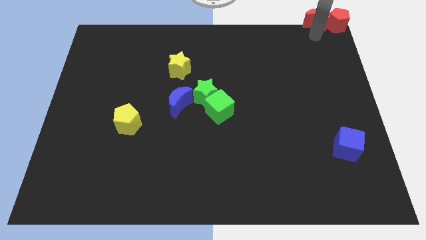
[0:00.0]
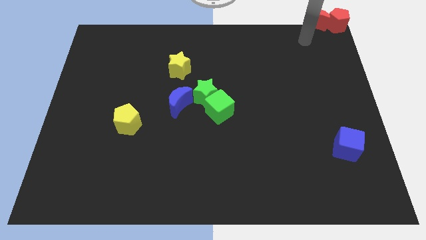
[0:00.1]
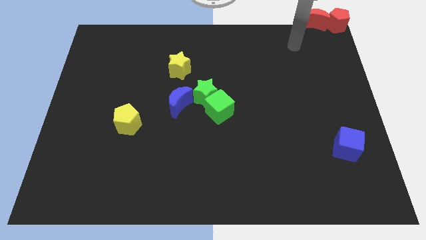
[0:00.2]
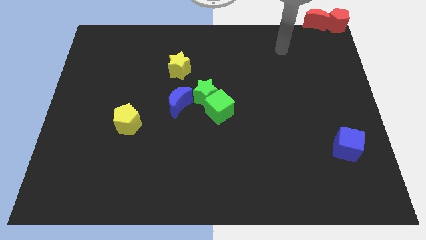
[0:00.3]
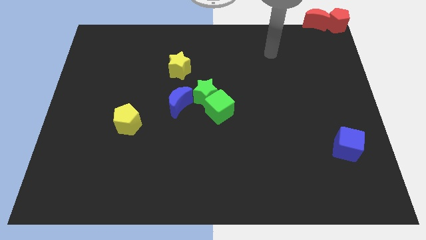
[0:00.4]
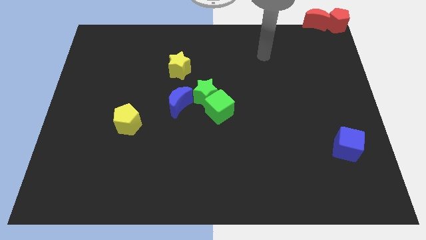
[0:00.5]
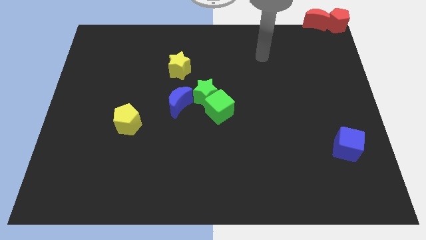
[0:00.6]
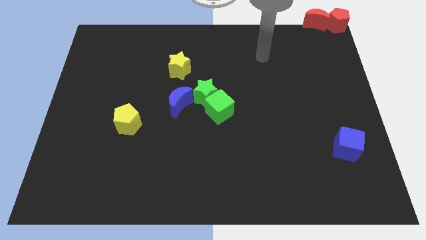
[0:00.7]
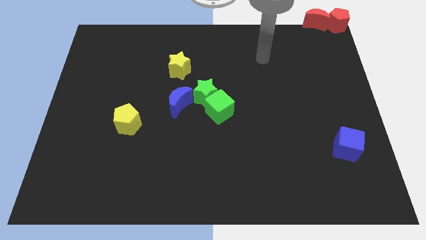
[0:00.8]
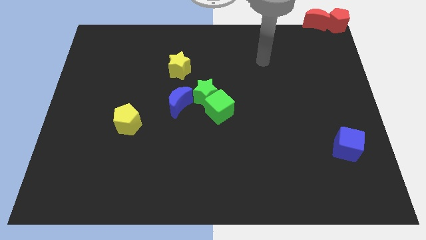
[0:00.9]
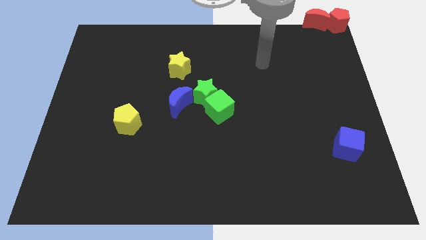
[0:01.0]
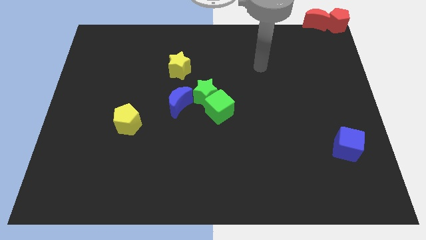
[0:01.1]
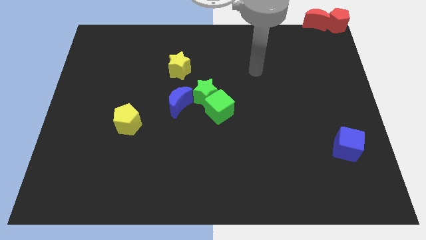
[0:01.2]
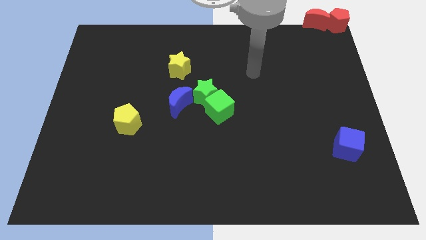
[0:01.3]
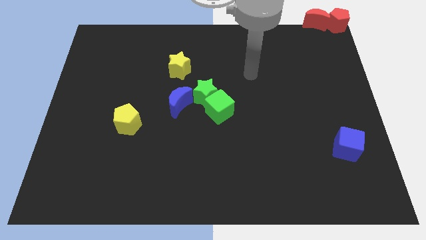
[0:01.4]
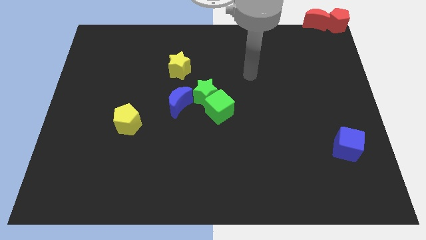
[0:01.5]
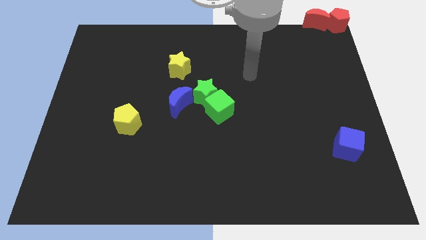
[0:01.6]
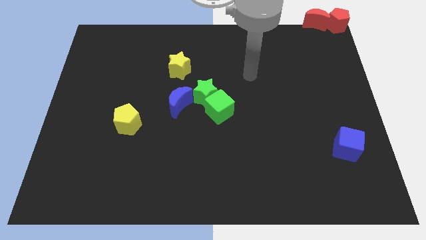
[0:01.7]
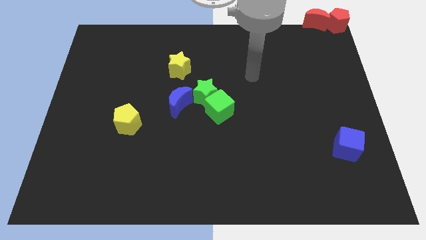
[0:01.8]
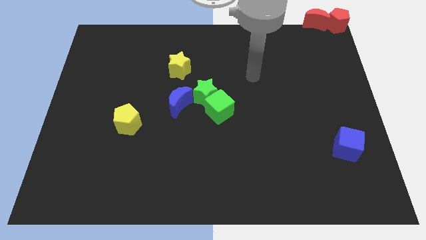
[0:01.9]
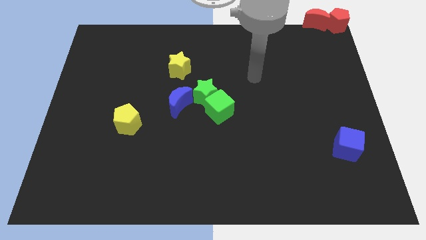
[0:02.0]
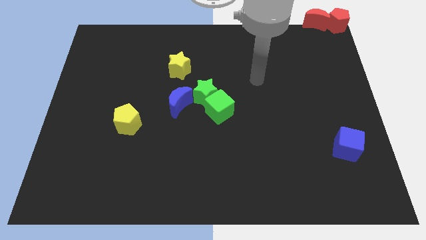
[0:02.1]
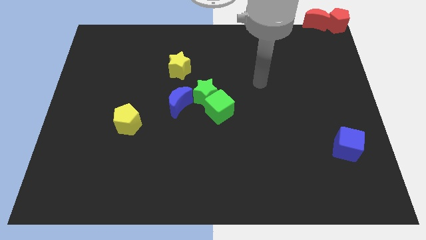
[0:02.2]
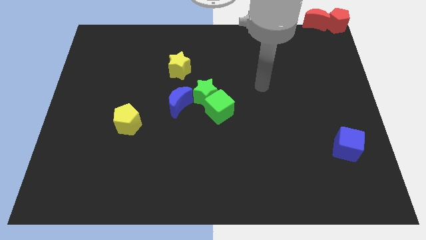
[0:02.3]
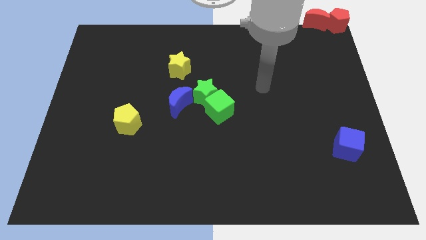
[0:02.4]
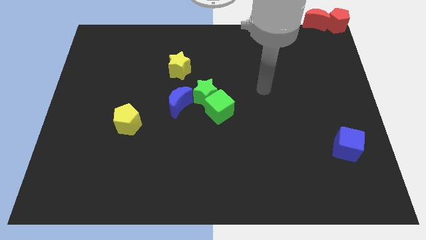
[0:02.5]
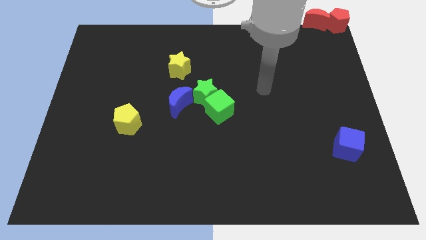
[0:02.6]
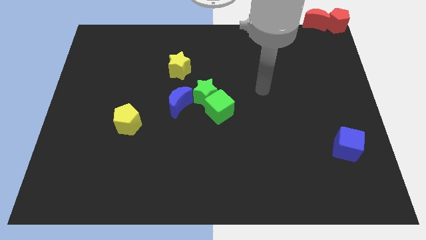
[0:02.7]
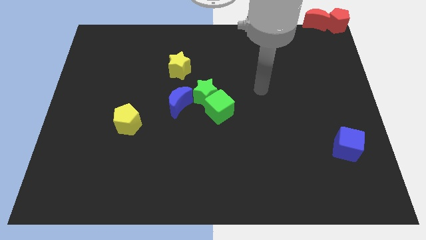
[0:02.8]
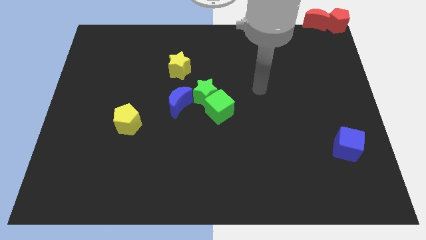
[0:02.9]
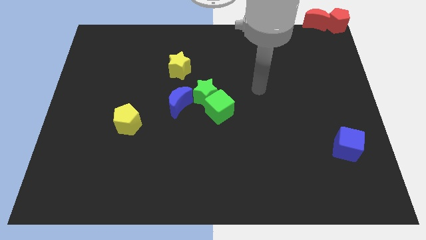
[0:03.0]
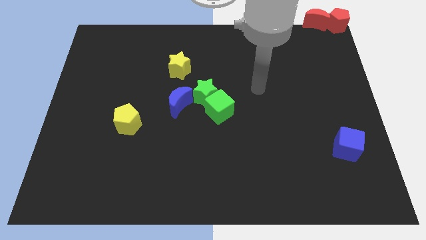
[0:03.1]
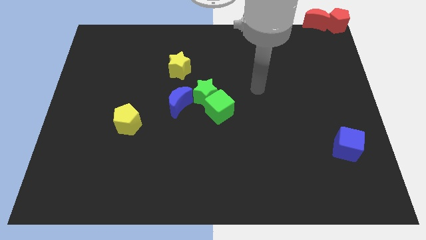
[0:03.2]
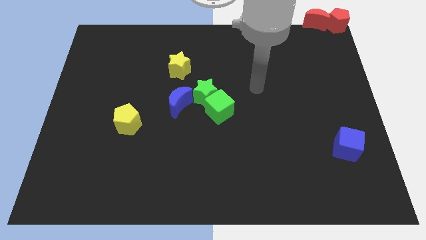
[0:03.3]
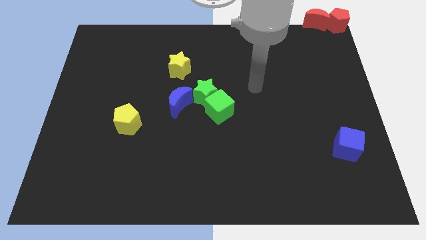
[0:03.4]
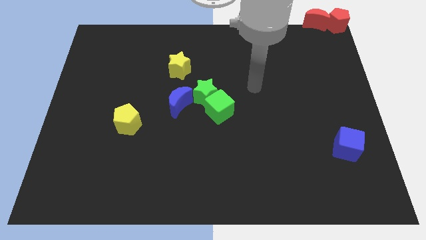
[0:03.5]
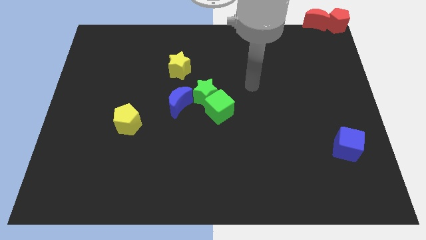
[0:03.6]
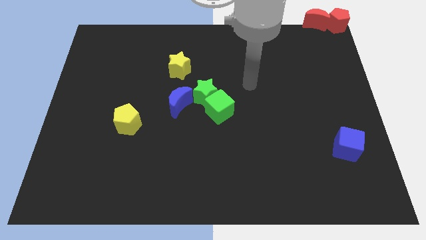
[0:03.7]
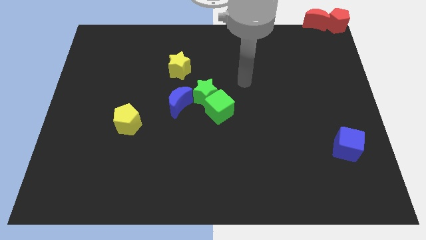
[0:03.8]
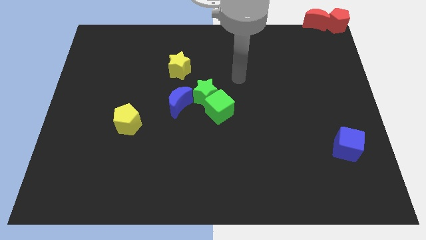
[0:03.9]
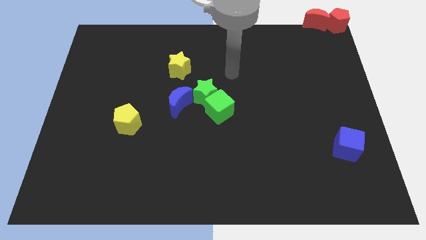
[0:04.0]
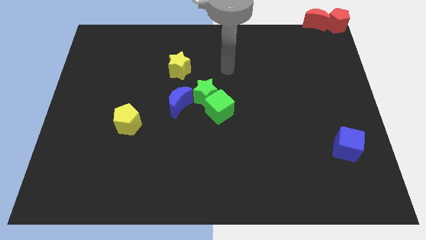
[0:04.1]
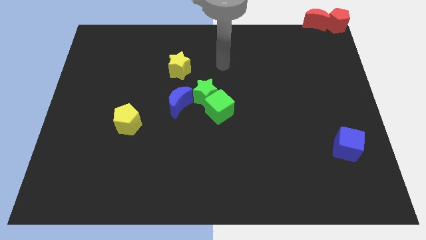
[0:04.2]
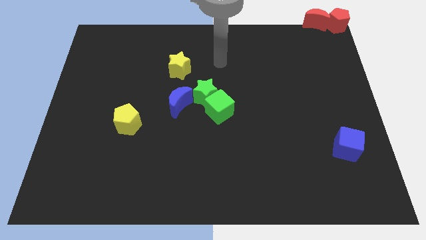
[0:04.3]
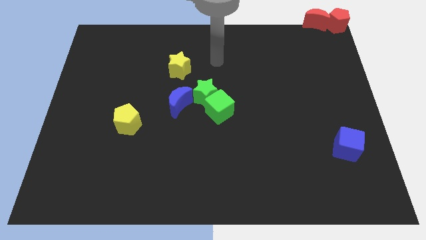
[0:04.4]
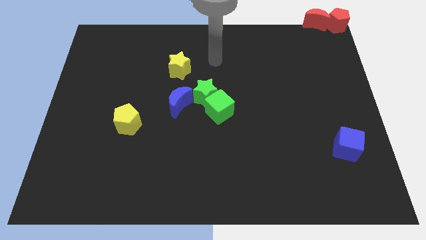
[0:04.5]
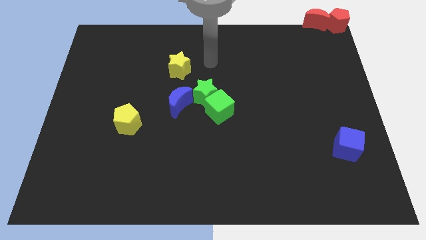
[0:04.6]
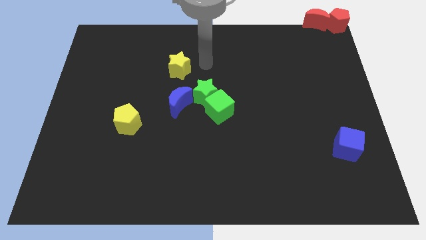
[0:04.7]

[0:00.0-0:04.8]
move your arm towards the yellow star

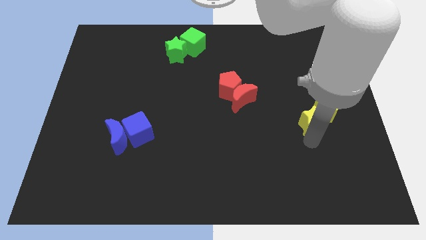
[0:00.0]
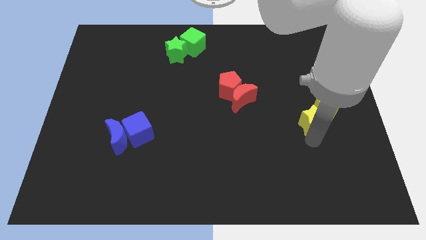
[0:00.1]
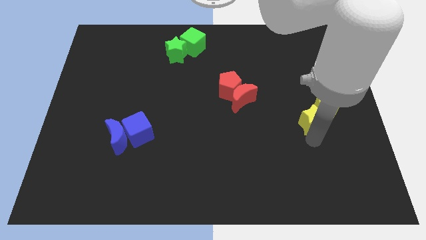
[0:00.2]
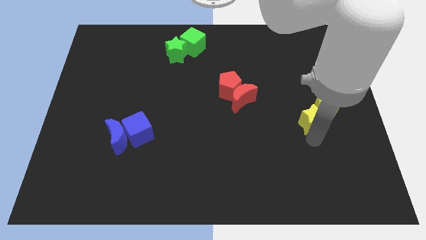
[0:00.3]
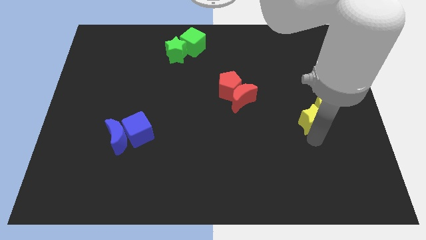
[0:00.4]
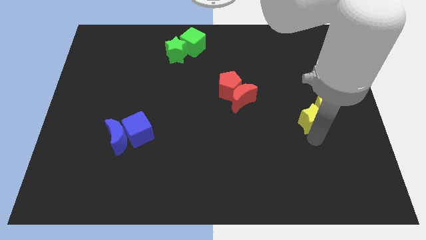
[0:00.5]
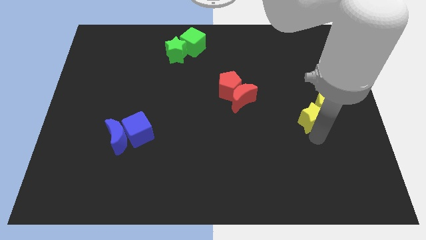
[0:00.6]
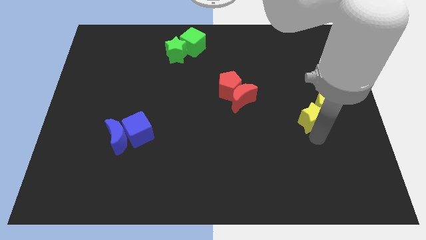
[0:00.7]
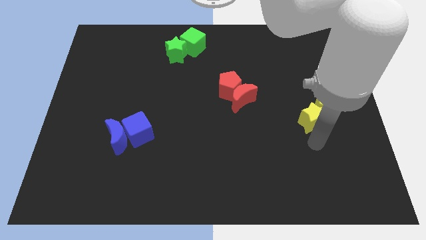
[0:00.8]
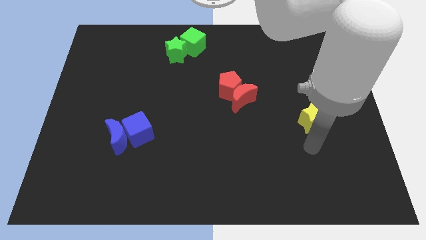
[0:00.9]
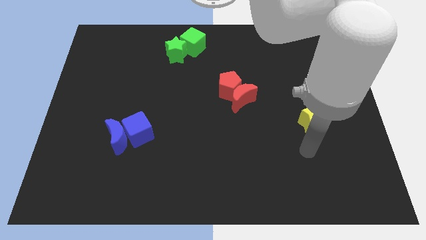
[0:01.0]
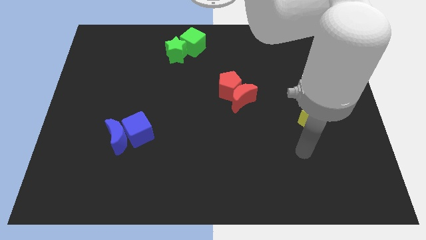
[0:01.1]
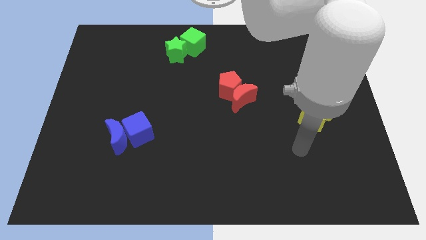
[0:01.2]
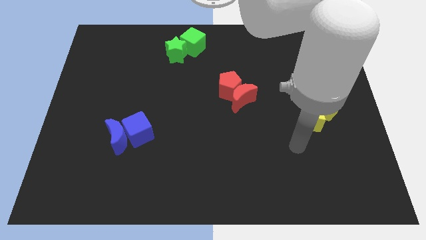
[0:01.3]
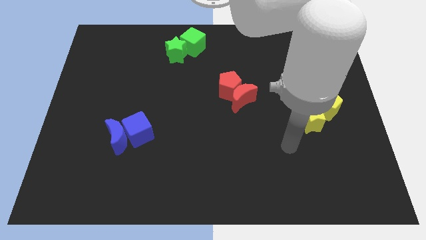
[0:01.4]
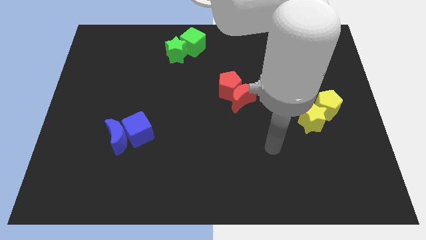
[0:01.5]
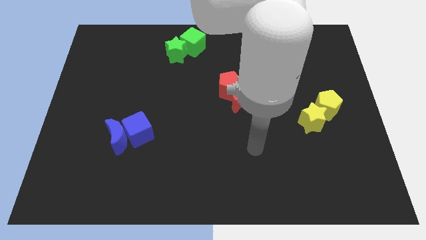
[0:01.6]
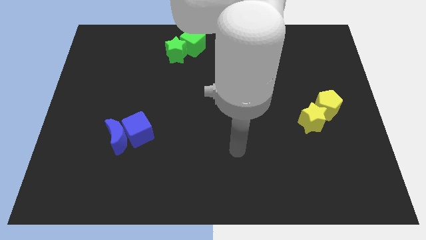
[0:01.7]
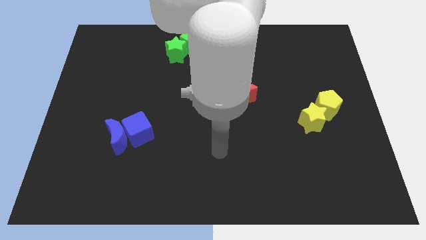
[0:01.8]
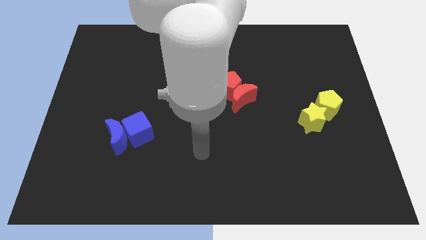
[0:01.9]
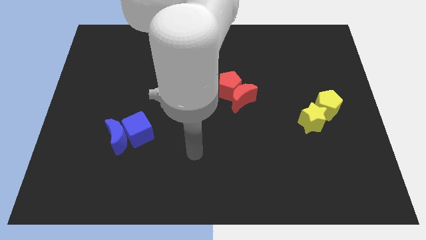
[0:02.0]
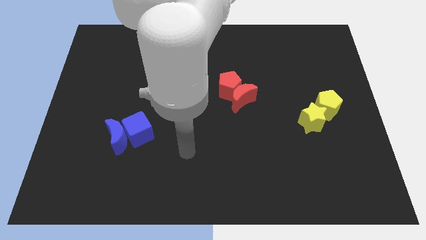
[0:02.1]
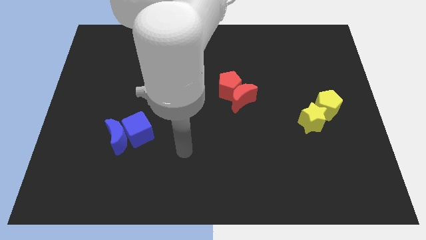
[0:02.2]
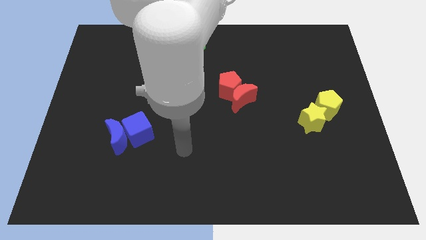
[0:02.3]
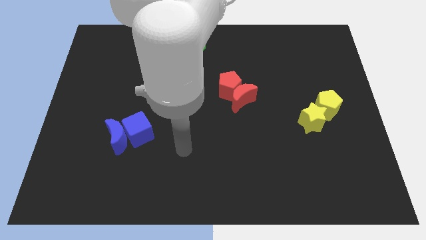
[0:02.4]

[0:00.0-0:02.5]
move your arm towards left

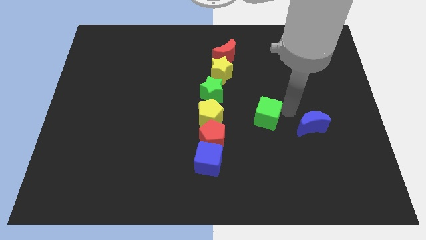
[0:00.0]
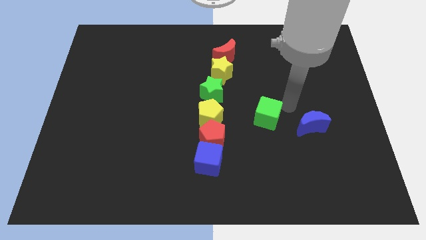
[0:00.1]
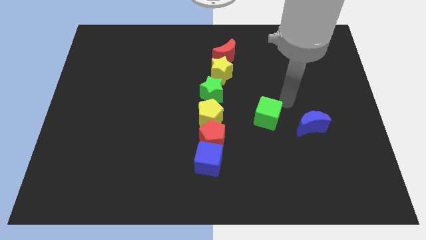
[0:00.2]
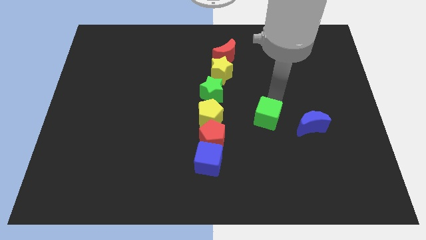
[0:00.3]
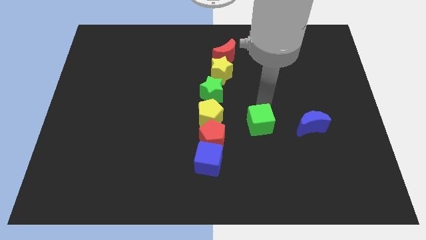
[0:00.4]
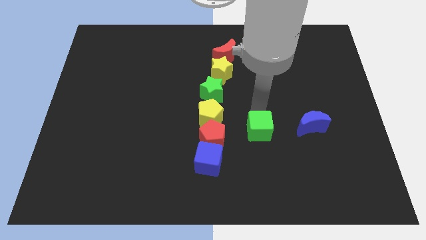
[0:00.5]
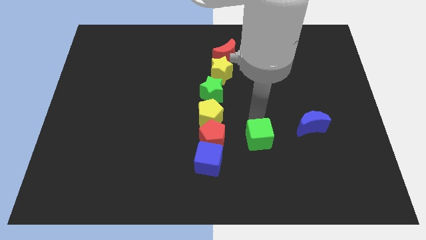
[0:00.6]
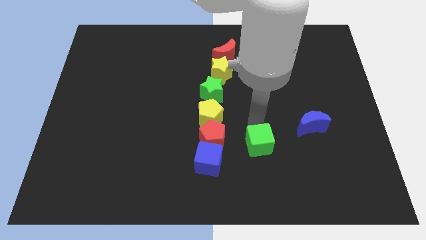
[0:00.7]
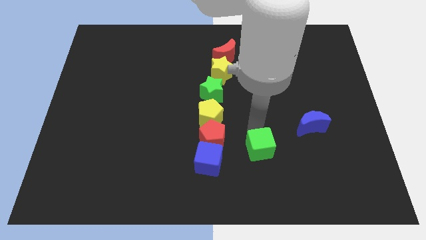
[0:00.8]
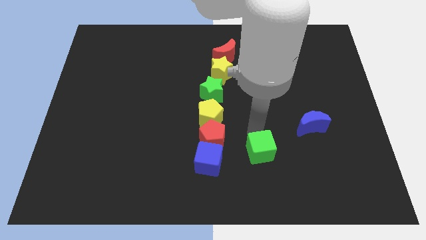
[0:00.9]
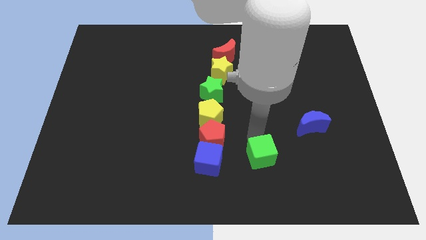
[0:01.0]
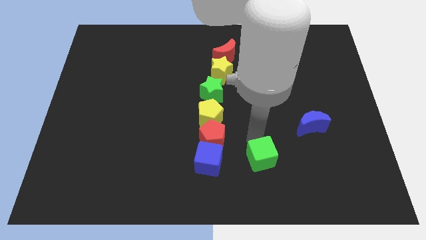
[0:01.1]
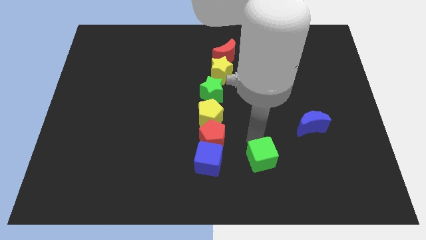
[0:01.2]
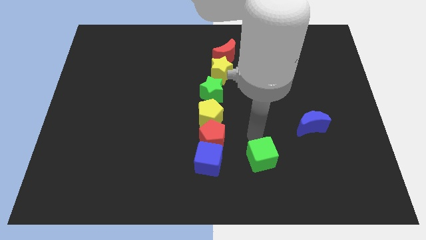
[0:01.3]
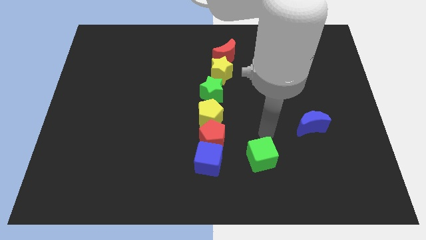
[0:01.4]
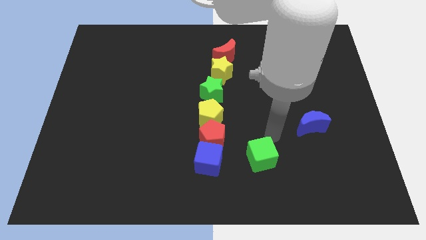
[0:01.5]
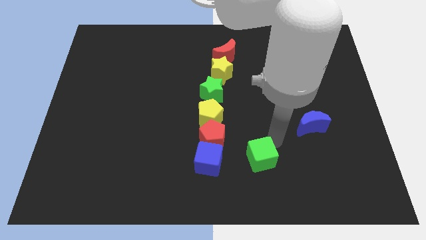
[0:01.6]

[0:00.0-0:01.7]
move the green cube right beside the blue cube
